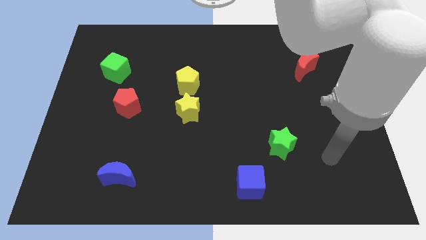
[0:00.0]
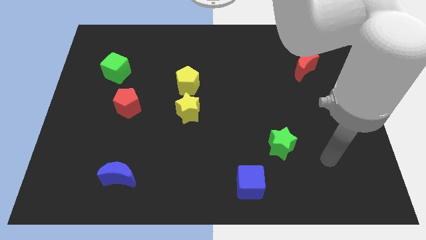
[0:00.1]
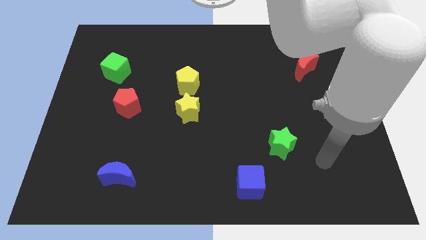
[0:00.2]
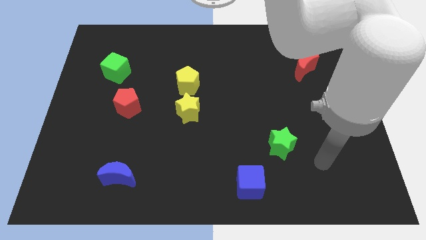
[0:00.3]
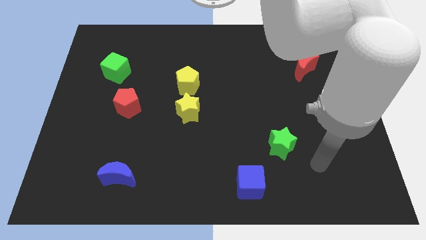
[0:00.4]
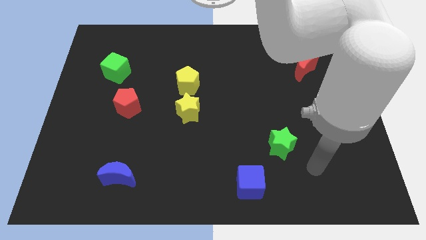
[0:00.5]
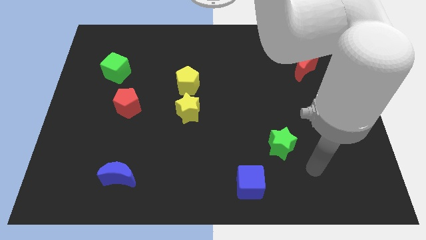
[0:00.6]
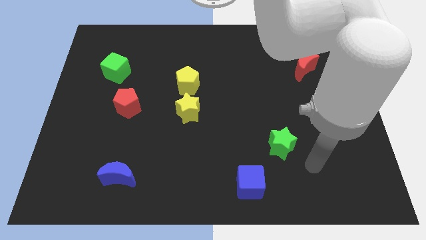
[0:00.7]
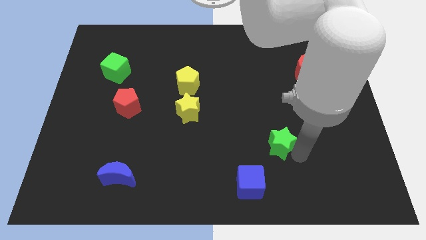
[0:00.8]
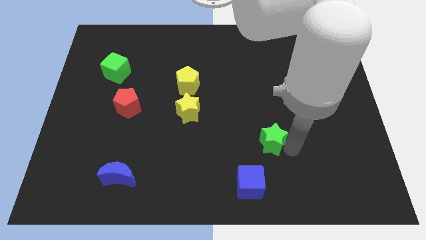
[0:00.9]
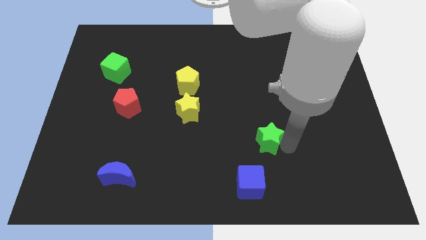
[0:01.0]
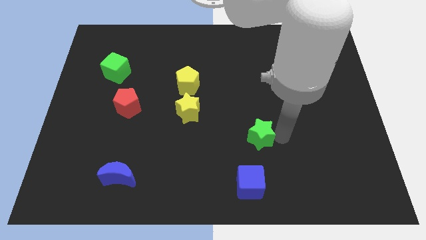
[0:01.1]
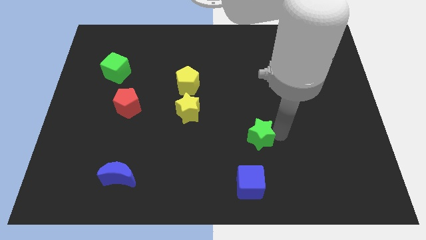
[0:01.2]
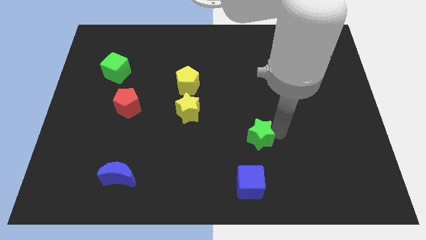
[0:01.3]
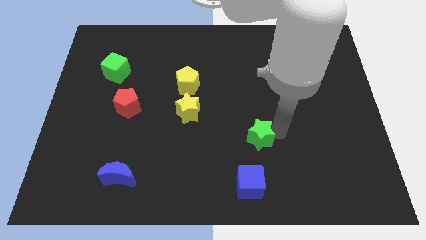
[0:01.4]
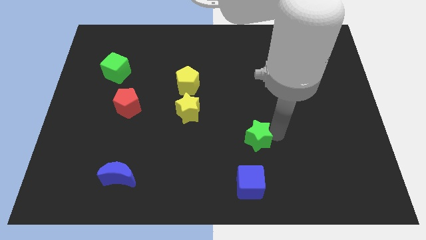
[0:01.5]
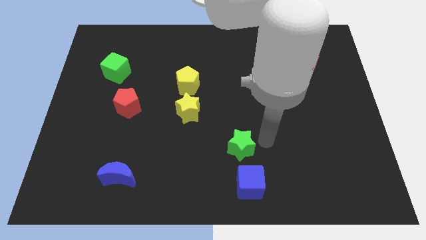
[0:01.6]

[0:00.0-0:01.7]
place green star to the top of blue cube

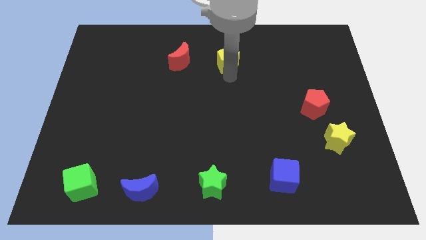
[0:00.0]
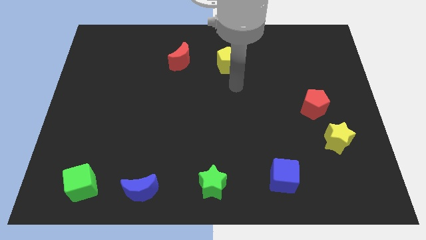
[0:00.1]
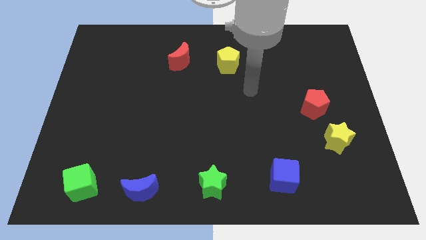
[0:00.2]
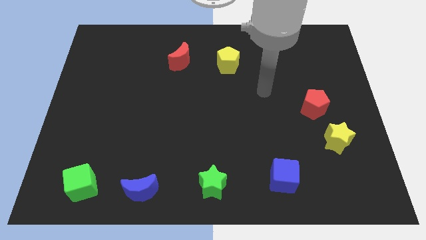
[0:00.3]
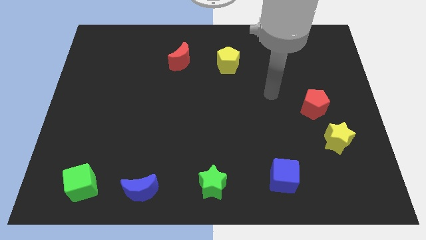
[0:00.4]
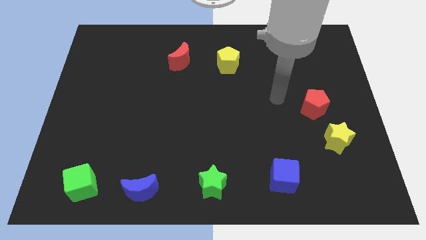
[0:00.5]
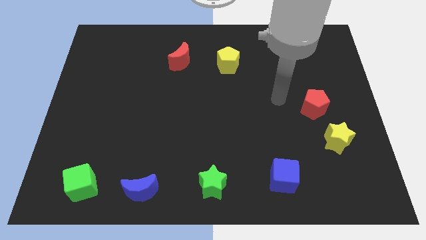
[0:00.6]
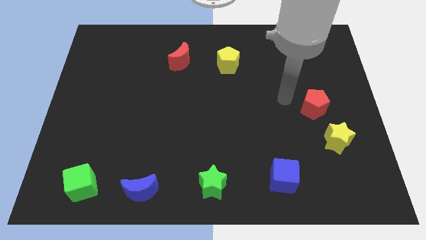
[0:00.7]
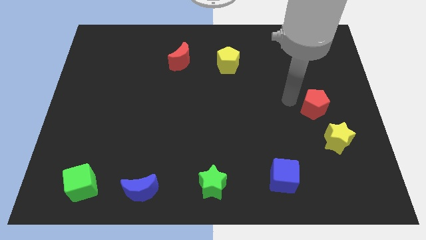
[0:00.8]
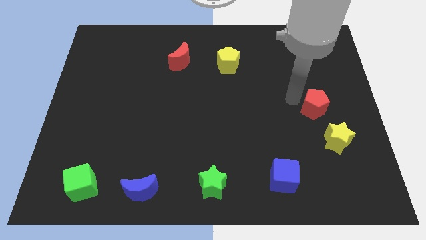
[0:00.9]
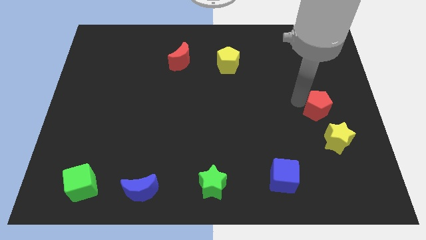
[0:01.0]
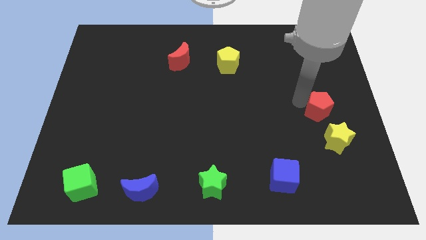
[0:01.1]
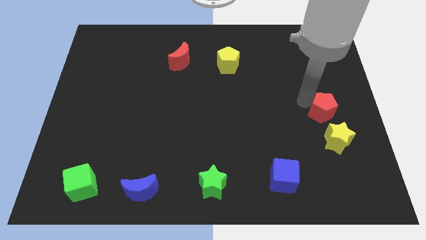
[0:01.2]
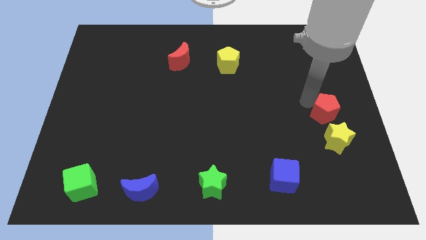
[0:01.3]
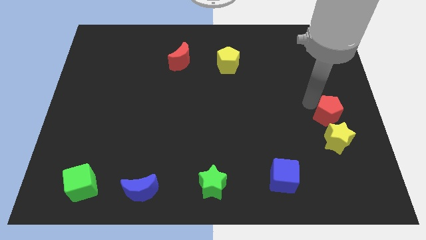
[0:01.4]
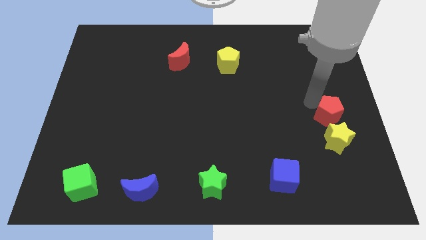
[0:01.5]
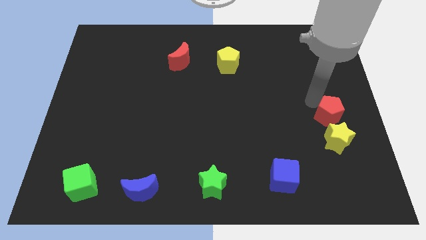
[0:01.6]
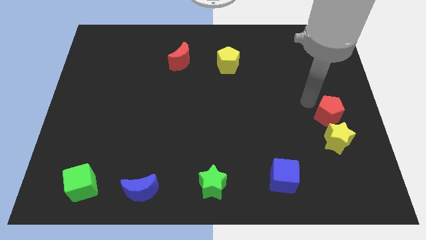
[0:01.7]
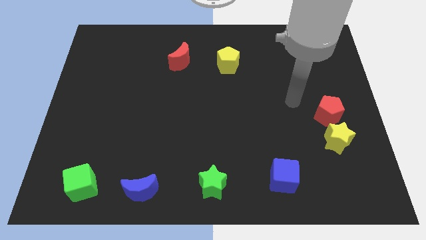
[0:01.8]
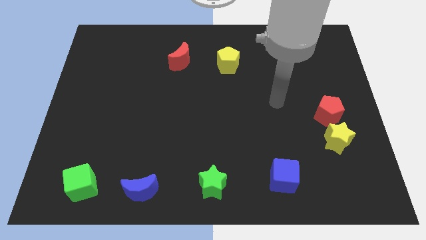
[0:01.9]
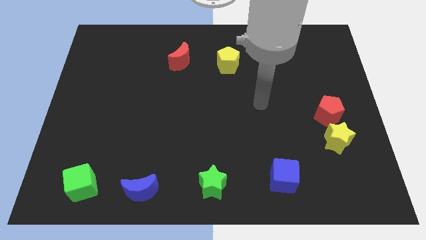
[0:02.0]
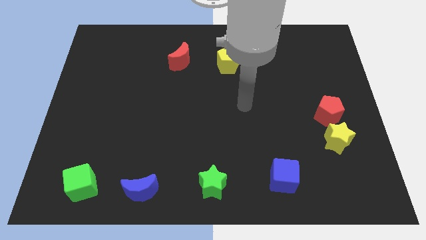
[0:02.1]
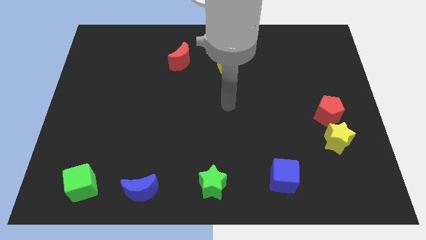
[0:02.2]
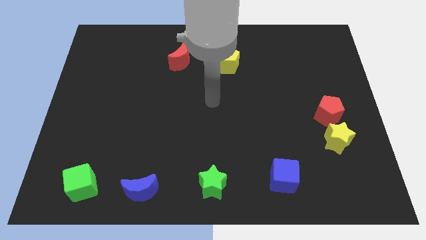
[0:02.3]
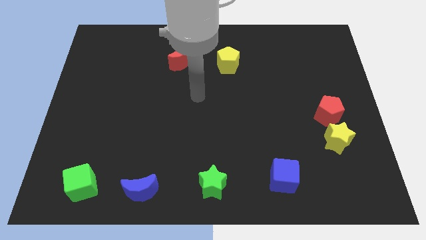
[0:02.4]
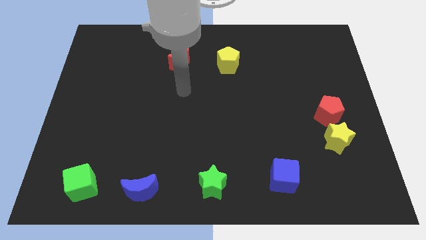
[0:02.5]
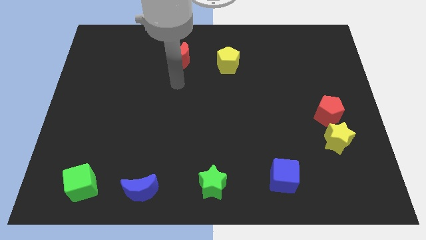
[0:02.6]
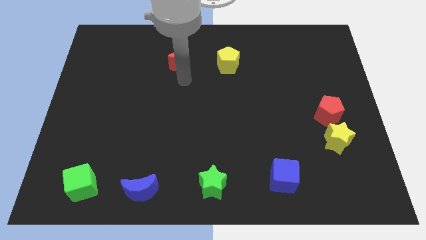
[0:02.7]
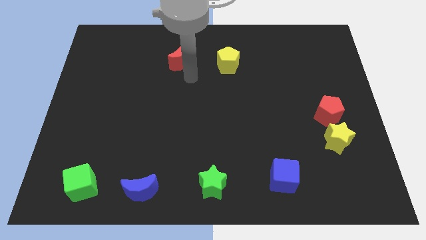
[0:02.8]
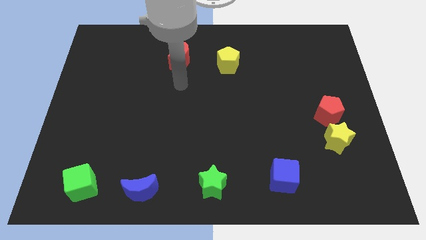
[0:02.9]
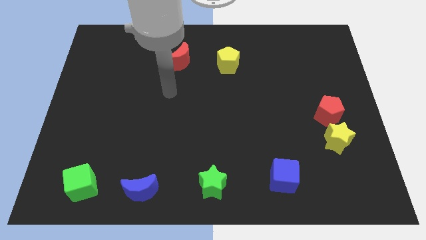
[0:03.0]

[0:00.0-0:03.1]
slightly push the red pentagon above the yellow star

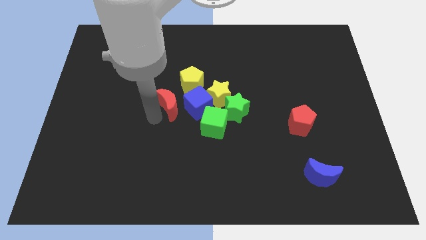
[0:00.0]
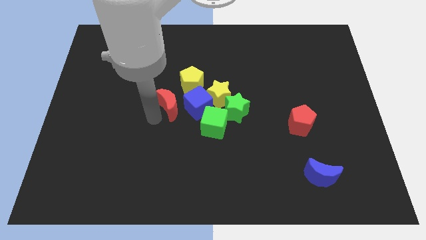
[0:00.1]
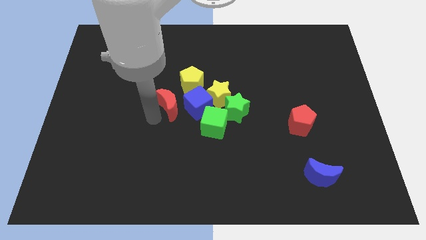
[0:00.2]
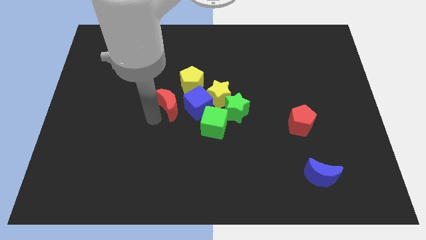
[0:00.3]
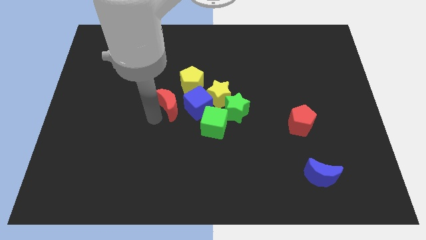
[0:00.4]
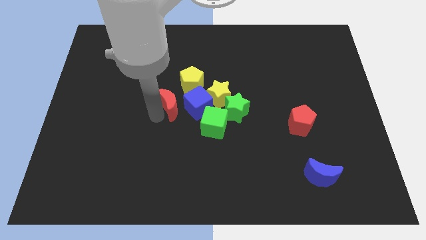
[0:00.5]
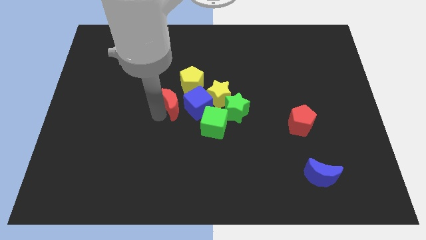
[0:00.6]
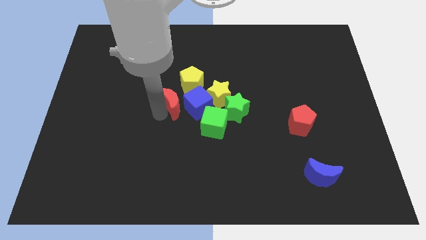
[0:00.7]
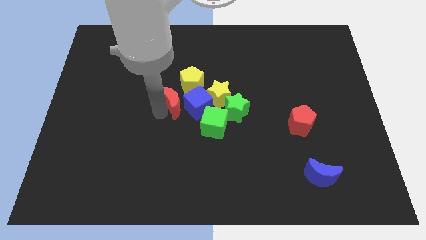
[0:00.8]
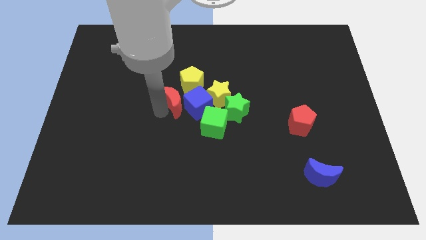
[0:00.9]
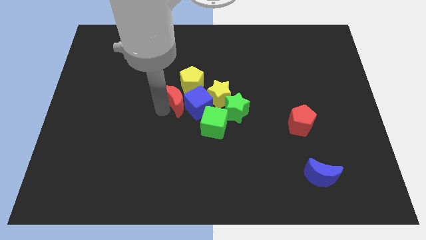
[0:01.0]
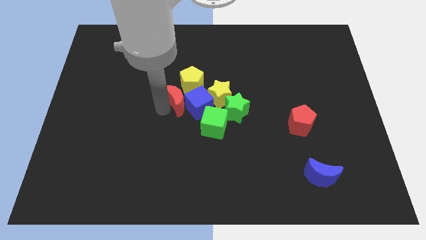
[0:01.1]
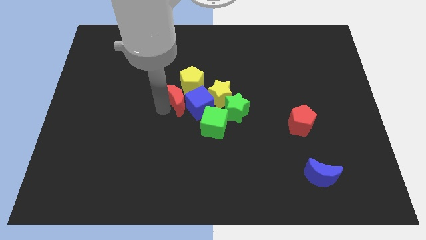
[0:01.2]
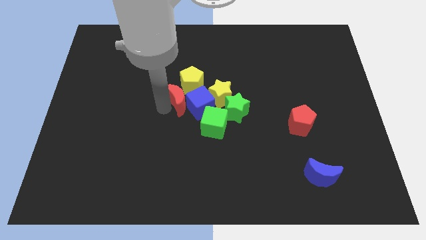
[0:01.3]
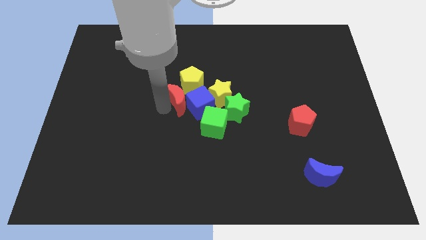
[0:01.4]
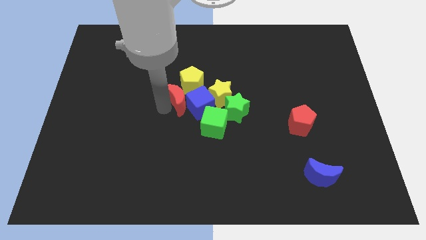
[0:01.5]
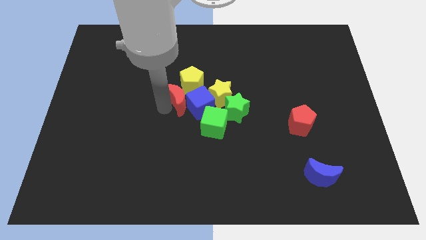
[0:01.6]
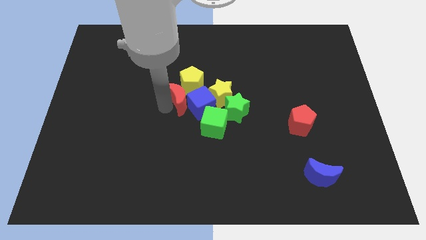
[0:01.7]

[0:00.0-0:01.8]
push the red crescent into the blue cube

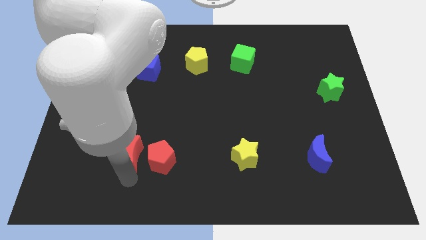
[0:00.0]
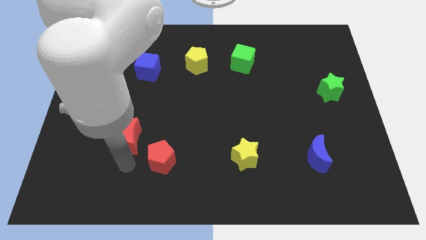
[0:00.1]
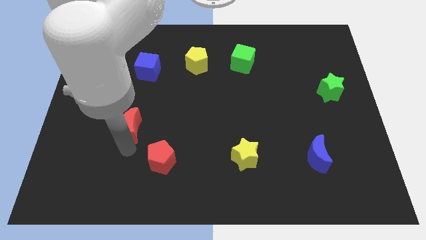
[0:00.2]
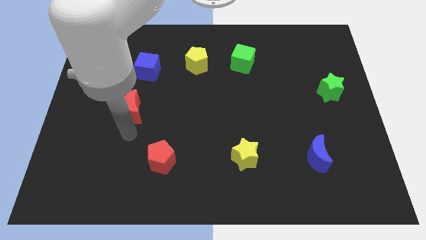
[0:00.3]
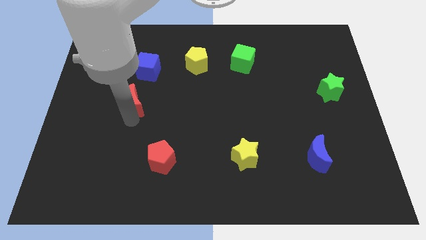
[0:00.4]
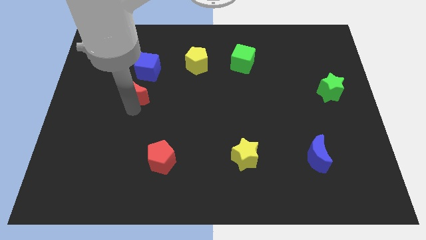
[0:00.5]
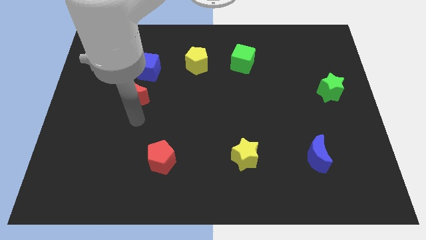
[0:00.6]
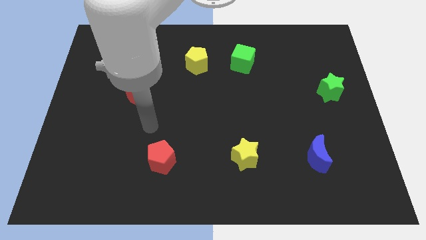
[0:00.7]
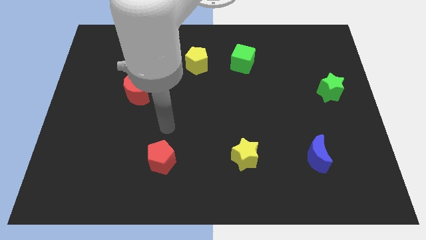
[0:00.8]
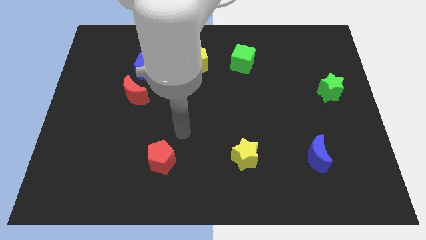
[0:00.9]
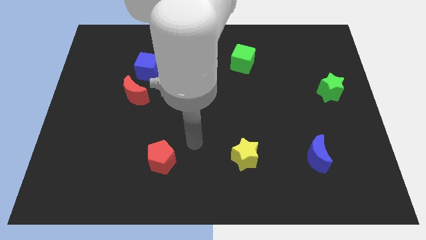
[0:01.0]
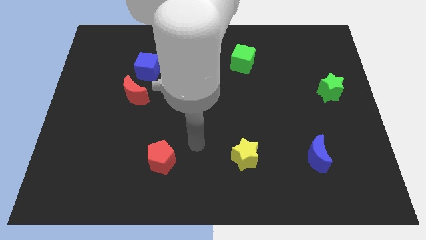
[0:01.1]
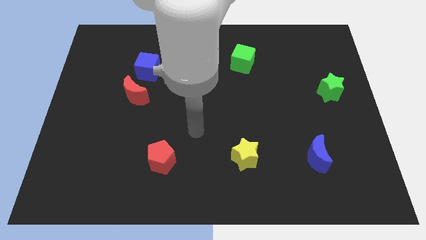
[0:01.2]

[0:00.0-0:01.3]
push the red crescent close to the blue cube

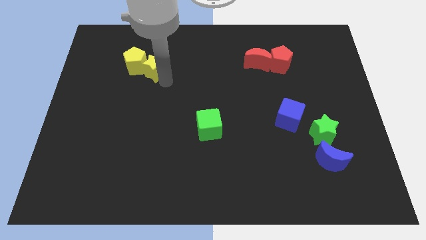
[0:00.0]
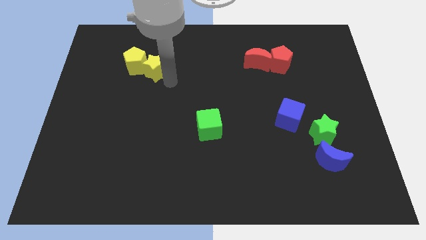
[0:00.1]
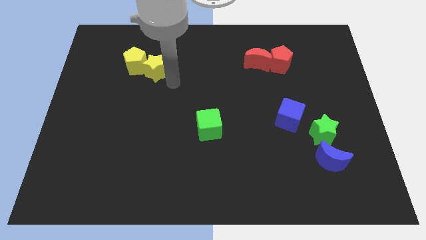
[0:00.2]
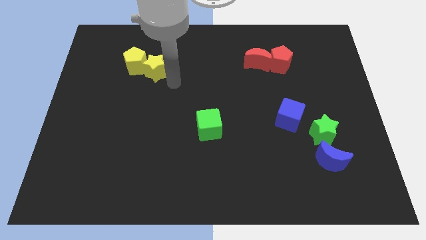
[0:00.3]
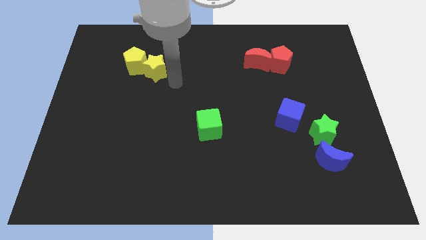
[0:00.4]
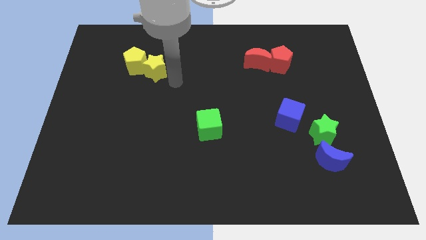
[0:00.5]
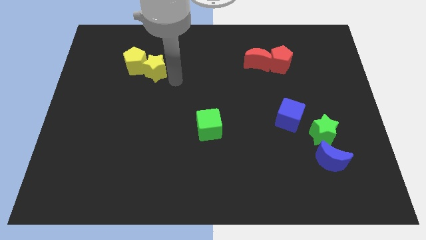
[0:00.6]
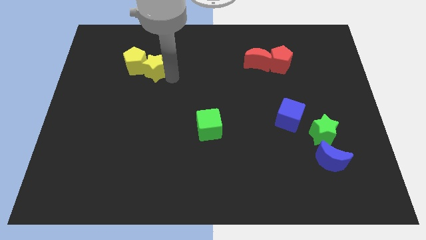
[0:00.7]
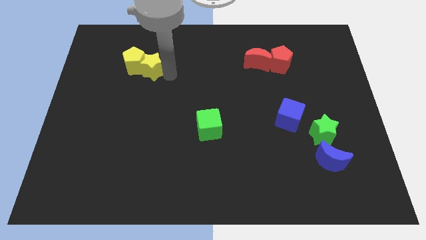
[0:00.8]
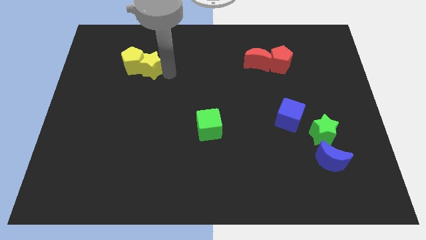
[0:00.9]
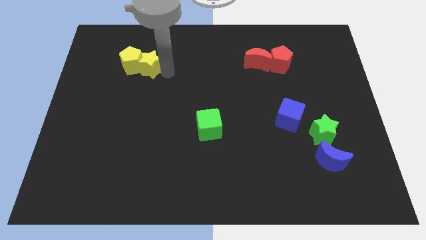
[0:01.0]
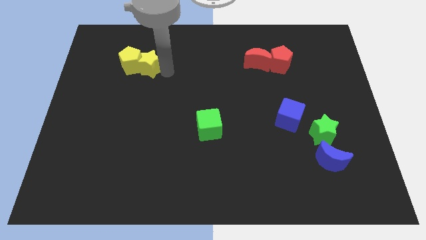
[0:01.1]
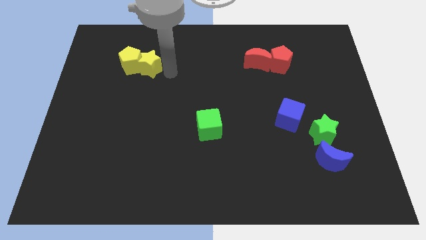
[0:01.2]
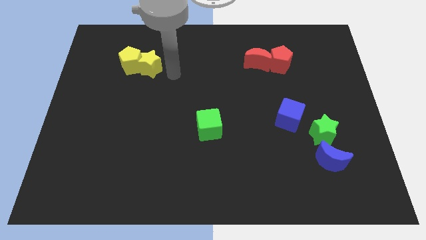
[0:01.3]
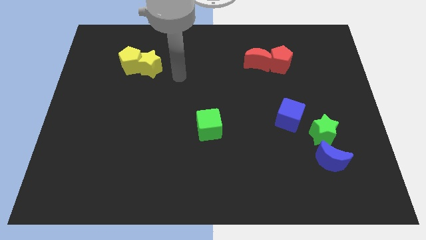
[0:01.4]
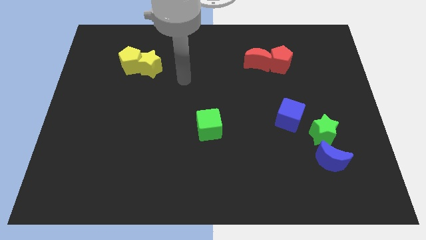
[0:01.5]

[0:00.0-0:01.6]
push two yellow blocks a bit left
